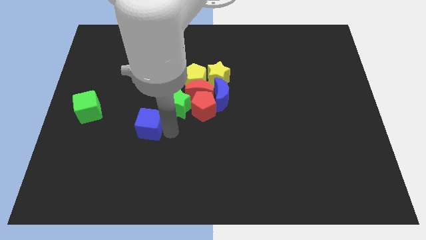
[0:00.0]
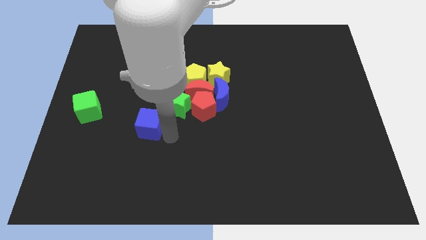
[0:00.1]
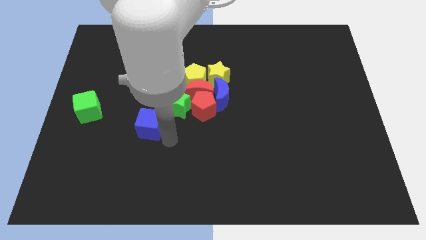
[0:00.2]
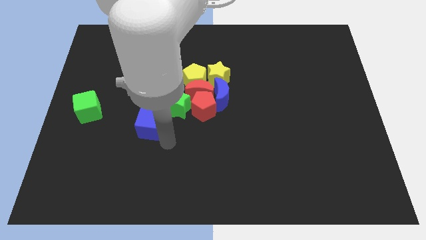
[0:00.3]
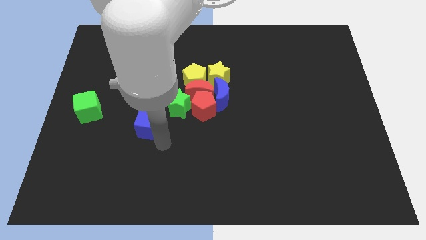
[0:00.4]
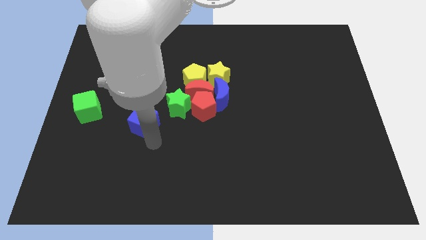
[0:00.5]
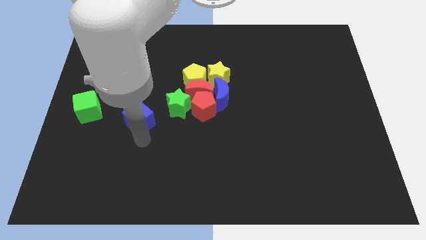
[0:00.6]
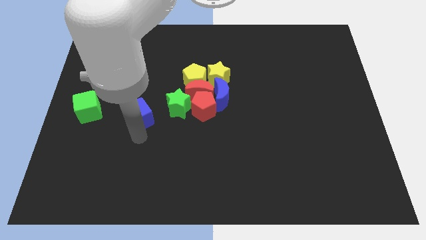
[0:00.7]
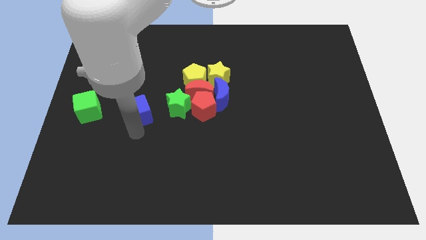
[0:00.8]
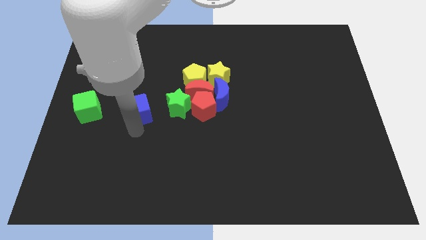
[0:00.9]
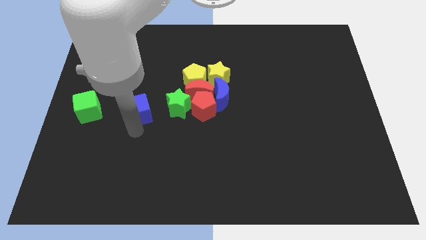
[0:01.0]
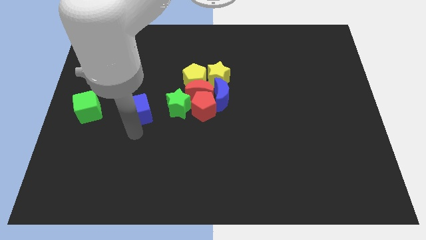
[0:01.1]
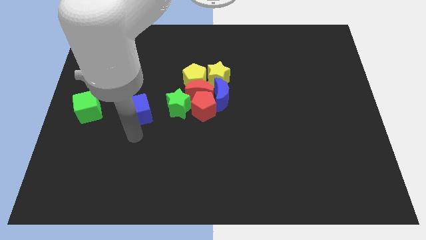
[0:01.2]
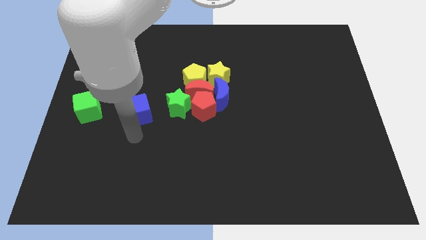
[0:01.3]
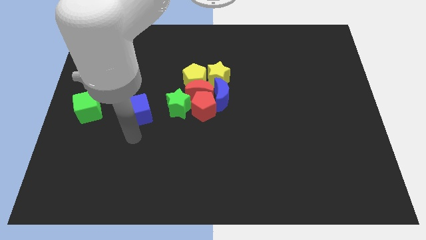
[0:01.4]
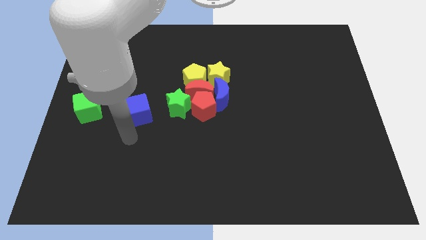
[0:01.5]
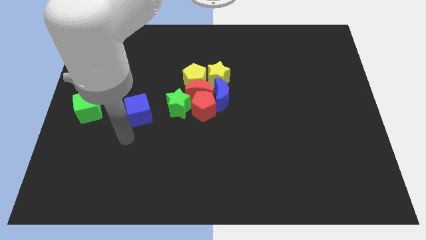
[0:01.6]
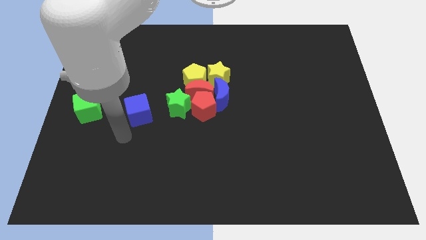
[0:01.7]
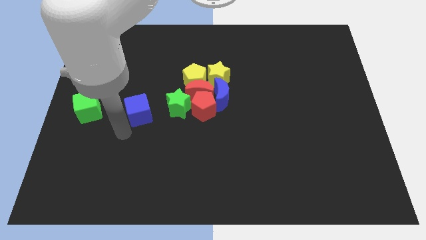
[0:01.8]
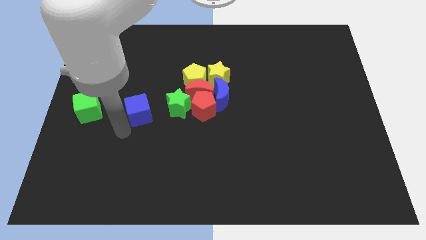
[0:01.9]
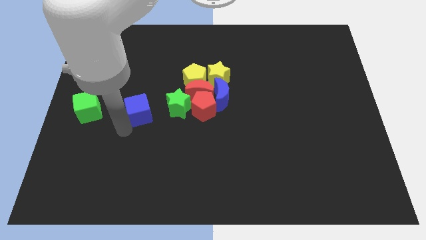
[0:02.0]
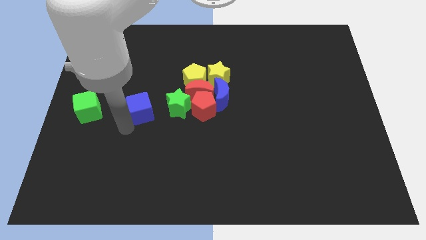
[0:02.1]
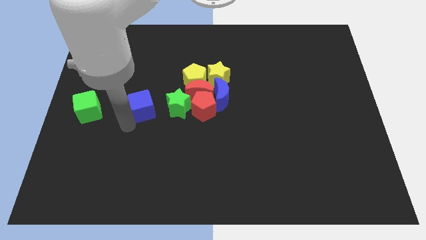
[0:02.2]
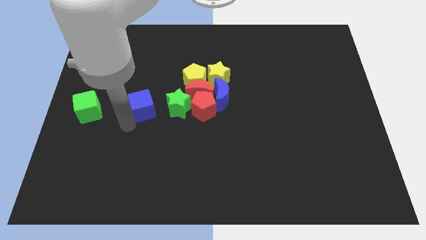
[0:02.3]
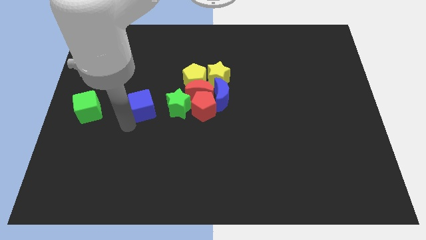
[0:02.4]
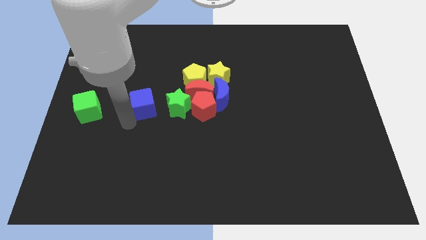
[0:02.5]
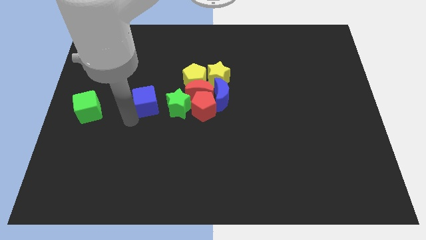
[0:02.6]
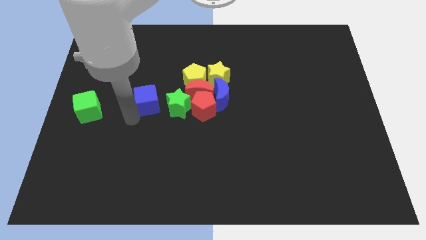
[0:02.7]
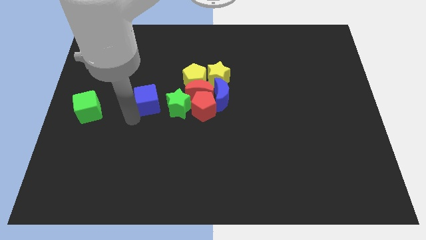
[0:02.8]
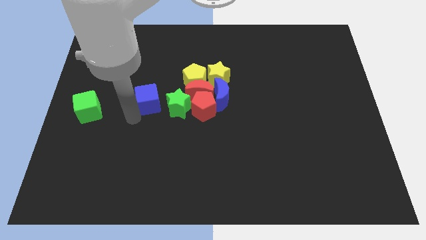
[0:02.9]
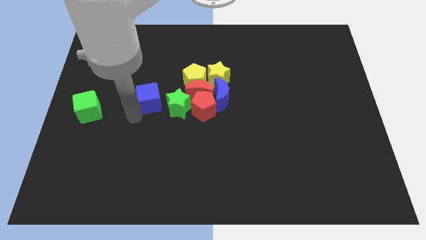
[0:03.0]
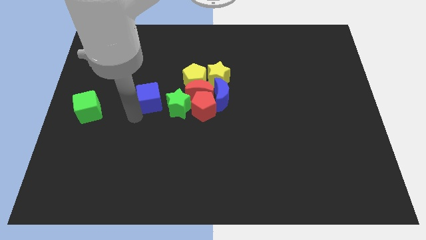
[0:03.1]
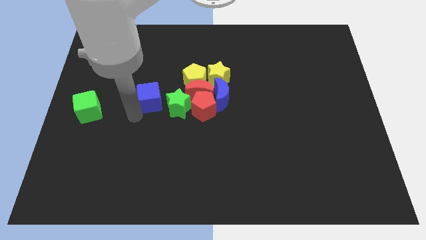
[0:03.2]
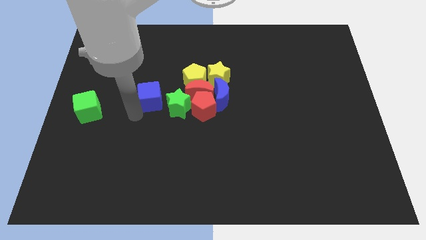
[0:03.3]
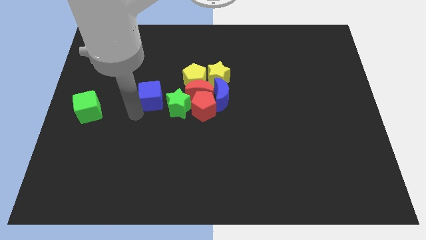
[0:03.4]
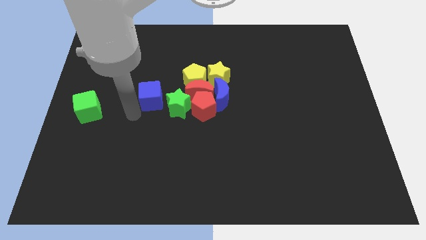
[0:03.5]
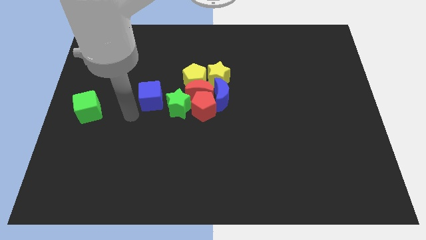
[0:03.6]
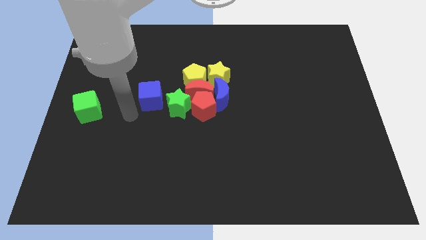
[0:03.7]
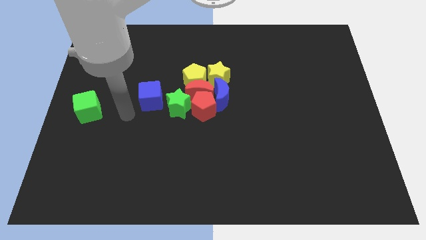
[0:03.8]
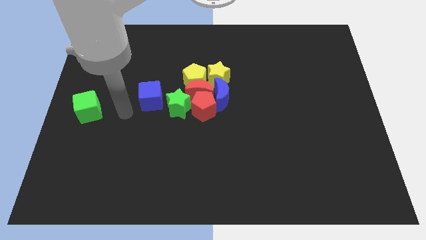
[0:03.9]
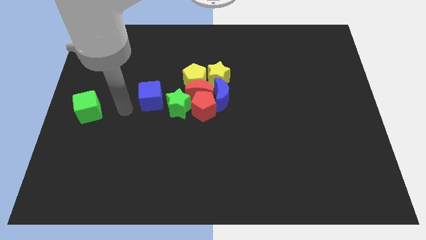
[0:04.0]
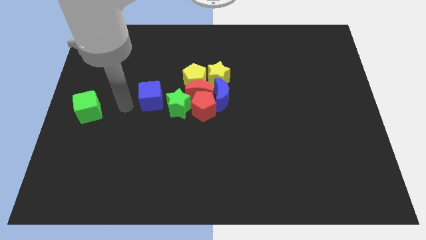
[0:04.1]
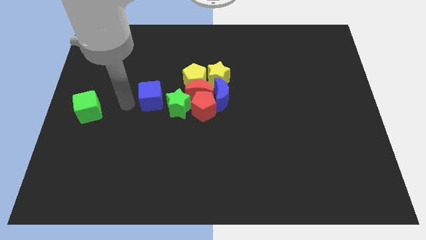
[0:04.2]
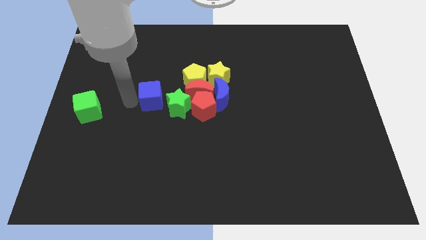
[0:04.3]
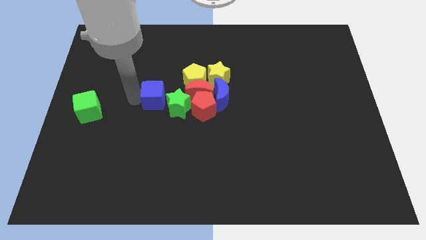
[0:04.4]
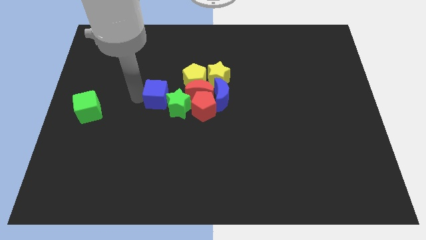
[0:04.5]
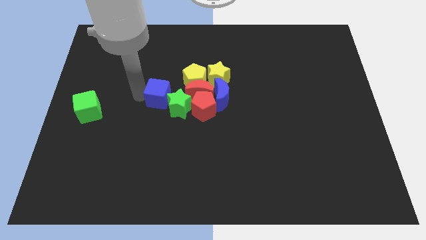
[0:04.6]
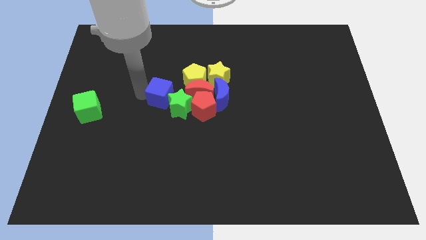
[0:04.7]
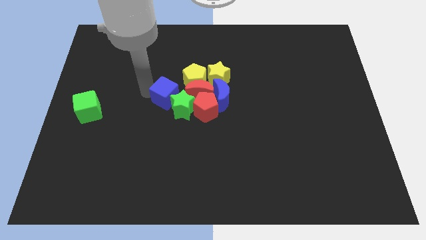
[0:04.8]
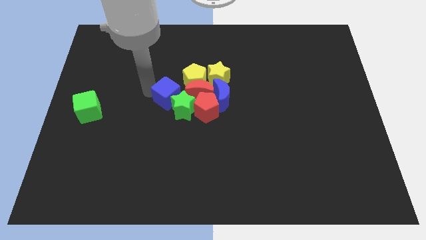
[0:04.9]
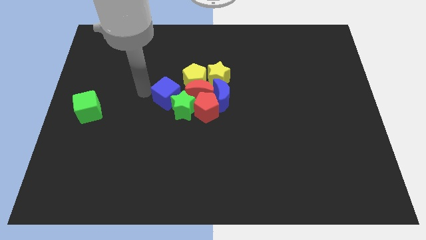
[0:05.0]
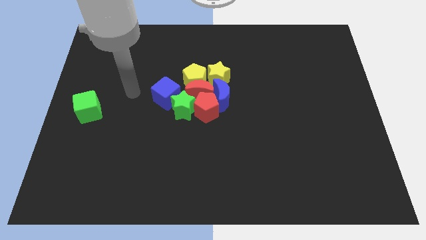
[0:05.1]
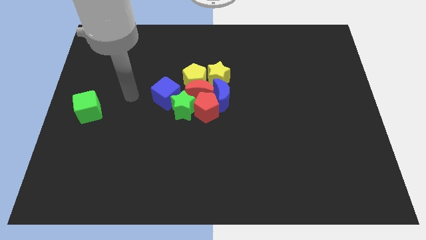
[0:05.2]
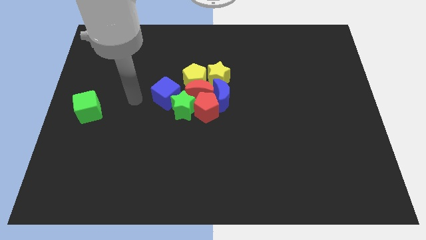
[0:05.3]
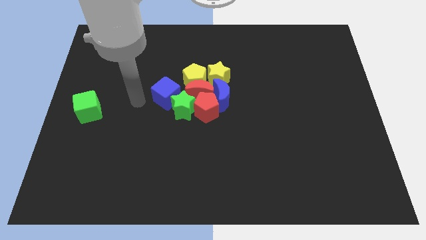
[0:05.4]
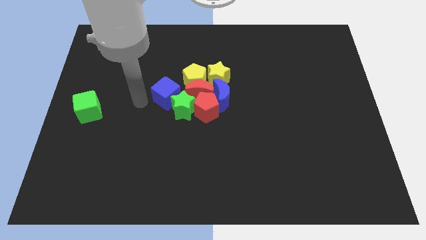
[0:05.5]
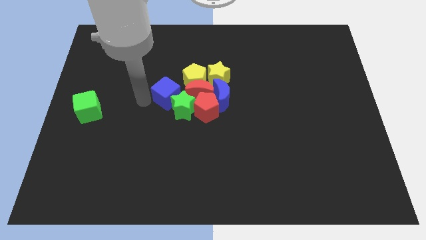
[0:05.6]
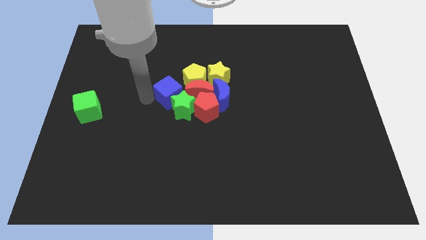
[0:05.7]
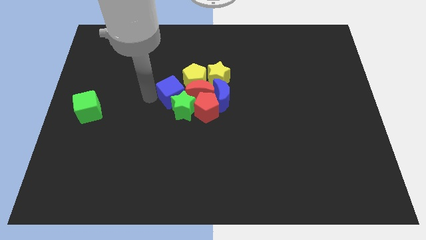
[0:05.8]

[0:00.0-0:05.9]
slide the blue cube to the top left side of the green star

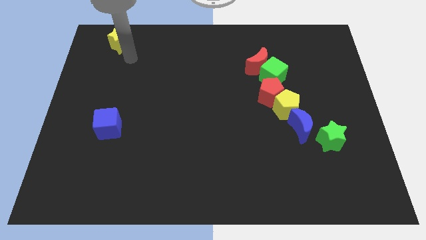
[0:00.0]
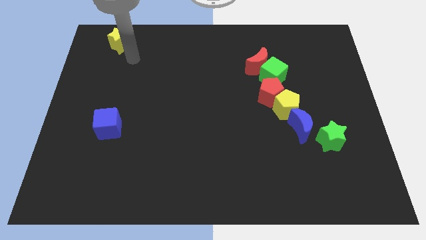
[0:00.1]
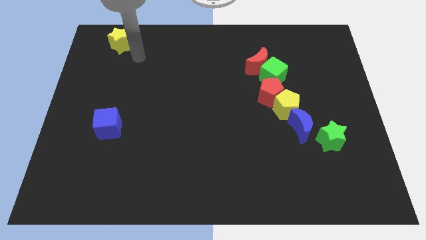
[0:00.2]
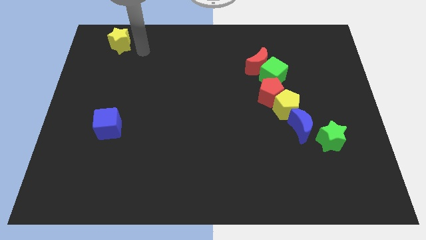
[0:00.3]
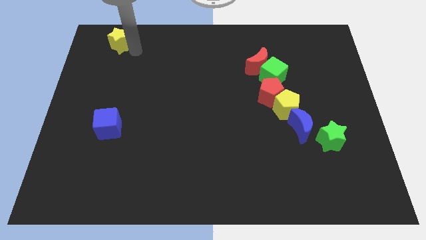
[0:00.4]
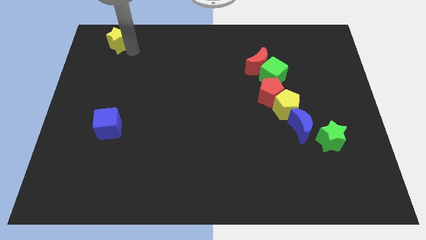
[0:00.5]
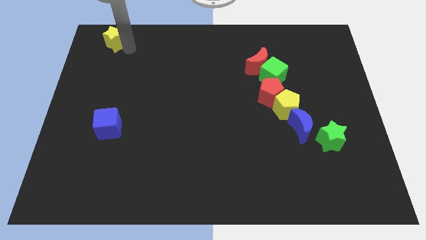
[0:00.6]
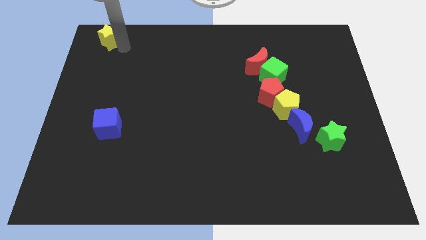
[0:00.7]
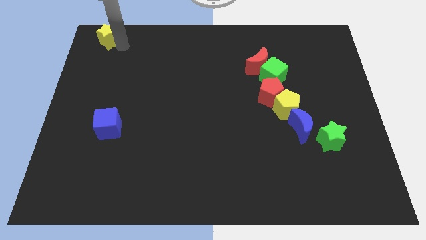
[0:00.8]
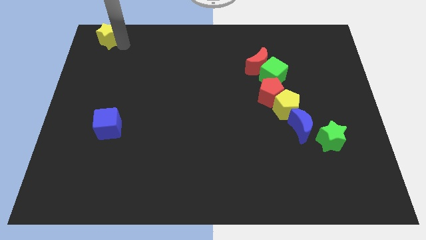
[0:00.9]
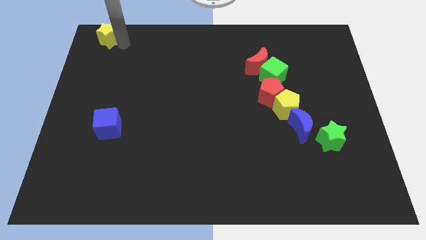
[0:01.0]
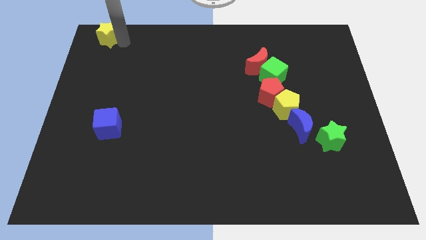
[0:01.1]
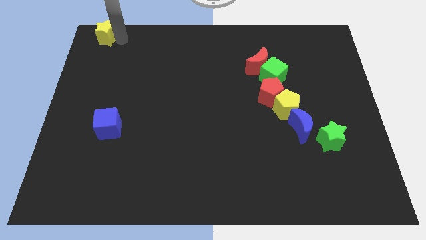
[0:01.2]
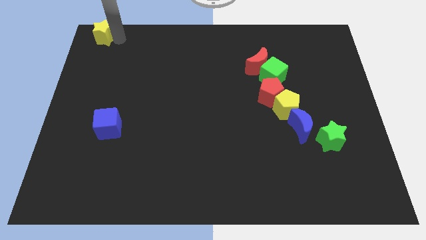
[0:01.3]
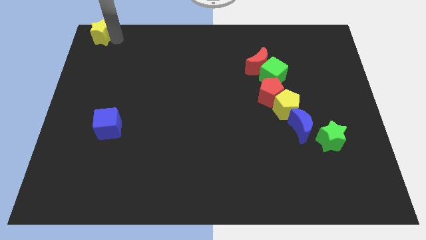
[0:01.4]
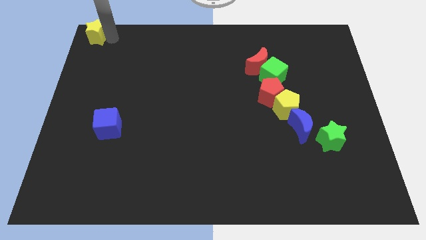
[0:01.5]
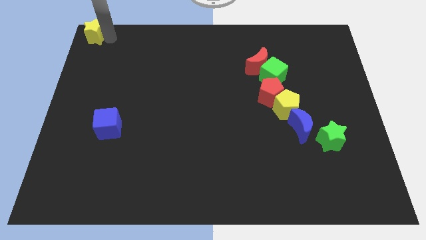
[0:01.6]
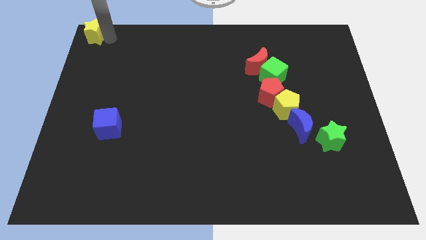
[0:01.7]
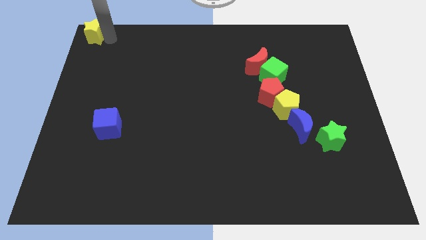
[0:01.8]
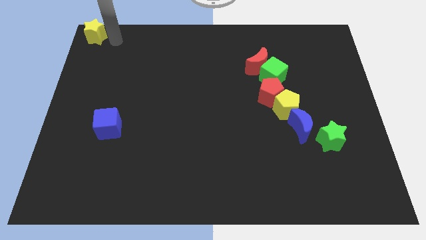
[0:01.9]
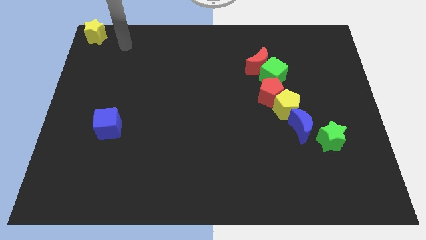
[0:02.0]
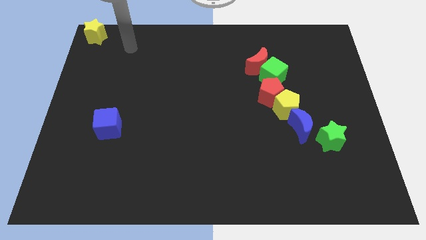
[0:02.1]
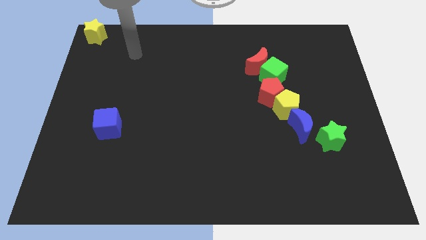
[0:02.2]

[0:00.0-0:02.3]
place the yellow star at the top left corner

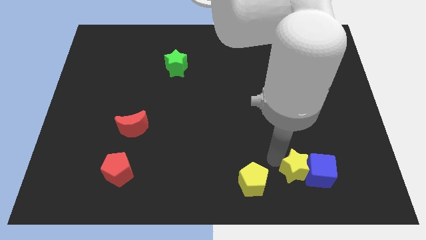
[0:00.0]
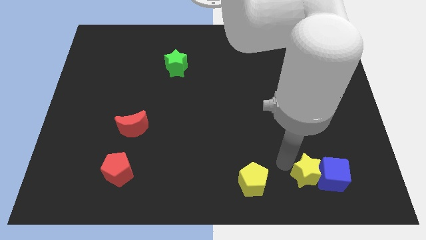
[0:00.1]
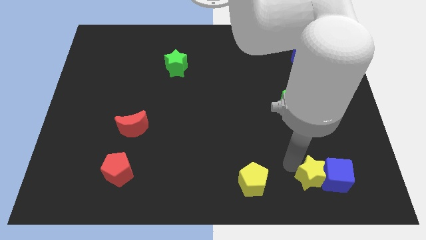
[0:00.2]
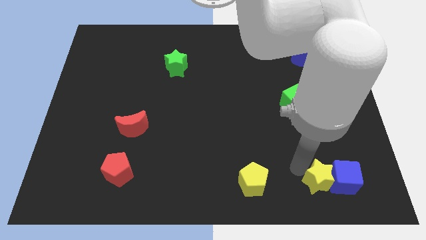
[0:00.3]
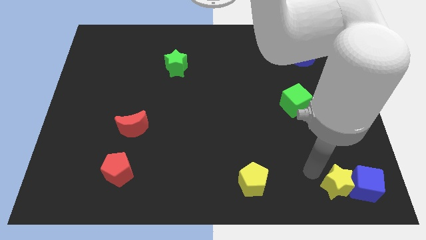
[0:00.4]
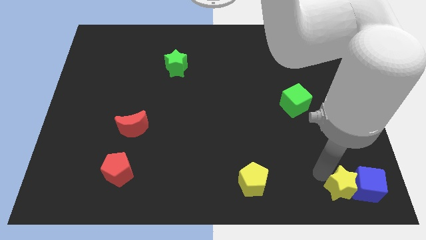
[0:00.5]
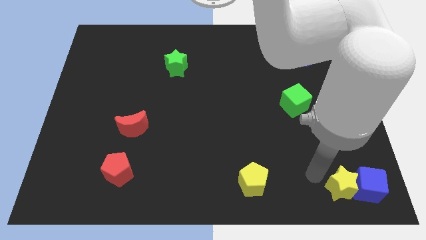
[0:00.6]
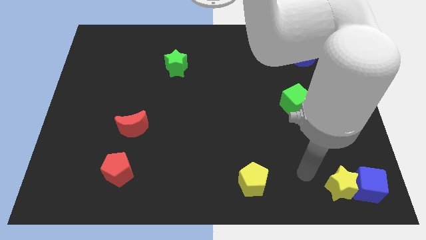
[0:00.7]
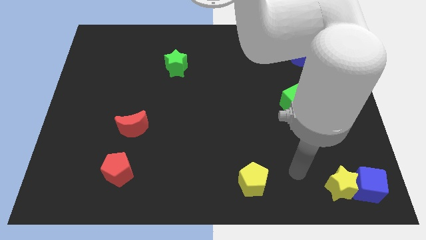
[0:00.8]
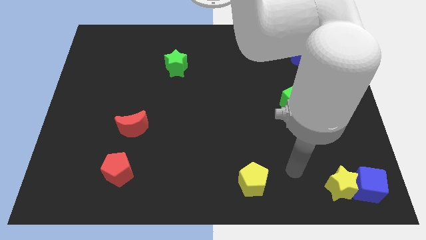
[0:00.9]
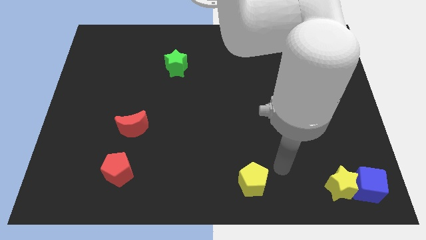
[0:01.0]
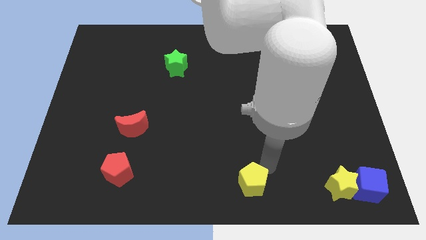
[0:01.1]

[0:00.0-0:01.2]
move yellow star and blue cube to the bottom right corner
